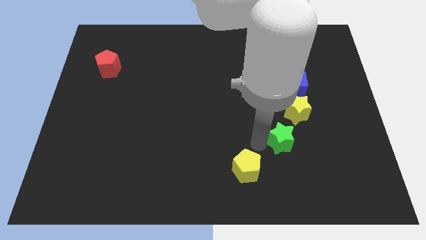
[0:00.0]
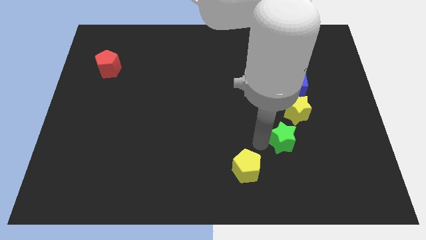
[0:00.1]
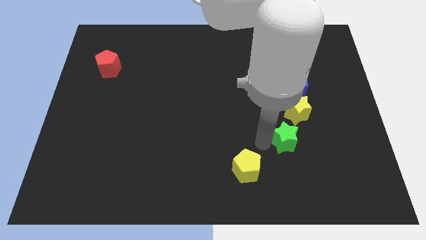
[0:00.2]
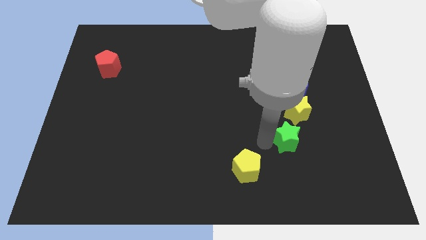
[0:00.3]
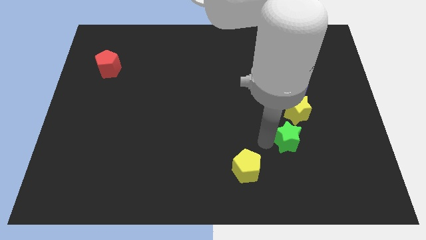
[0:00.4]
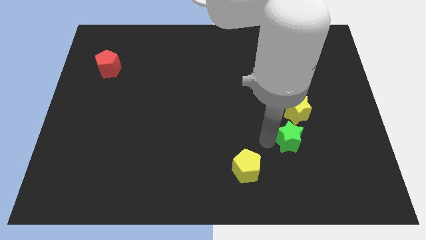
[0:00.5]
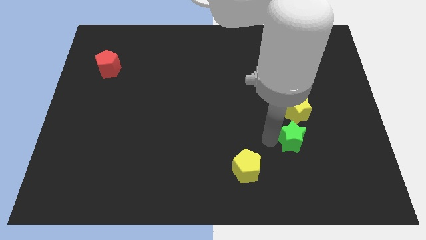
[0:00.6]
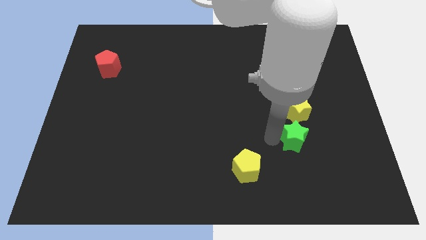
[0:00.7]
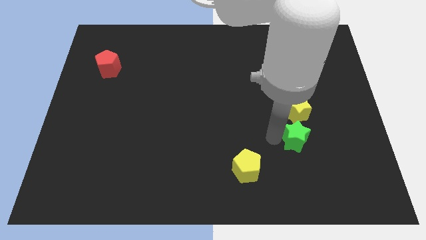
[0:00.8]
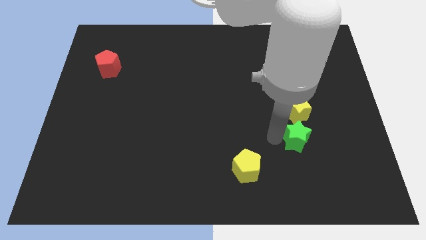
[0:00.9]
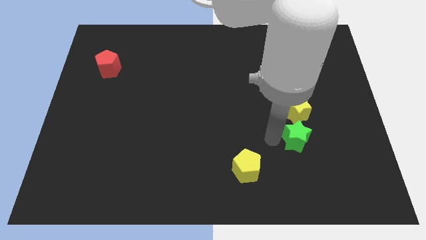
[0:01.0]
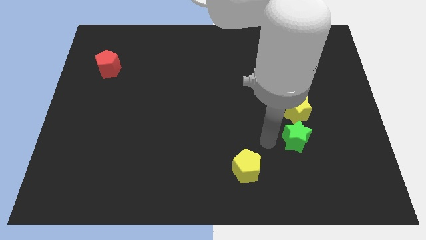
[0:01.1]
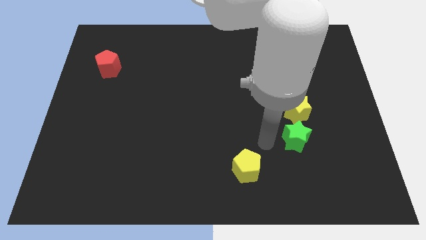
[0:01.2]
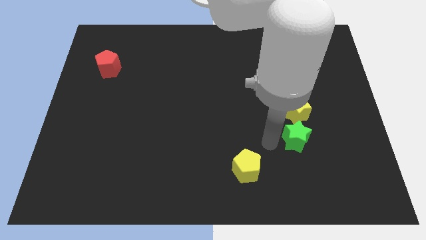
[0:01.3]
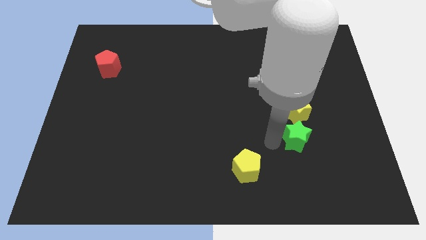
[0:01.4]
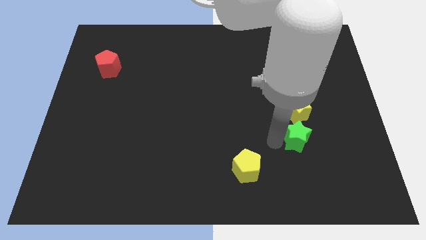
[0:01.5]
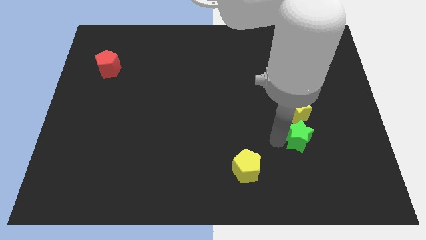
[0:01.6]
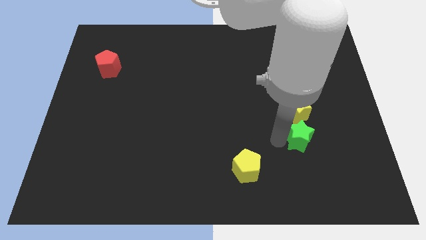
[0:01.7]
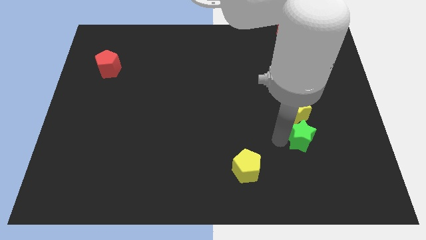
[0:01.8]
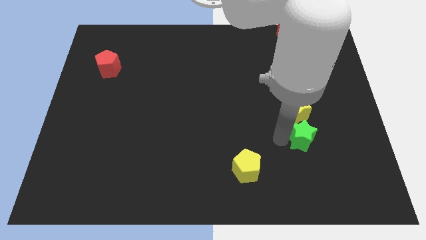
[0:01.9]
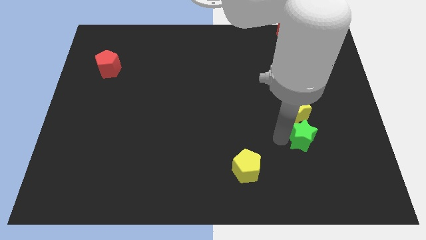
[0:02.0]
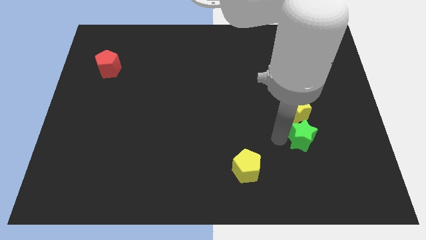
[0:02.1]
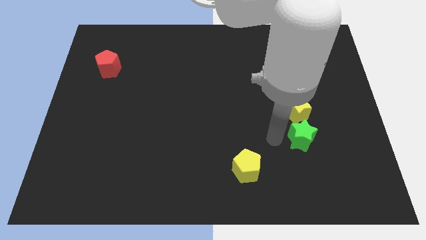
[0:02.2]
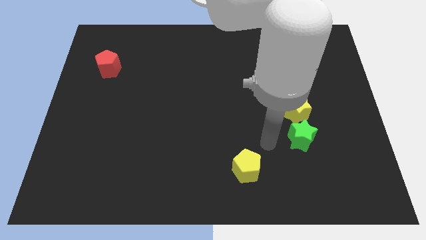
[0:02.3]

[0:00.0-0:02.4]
place the green star below yellow star

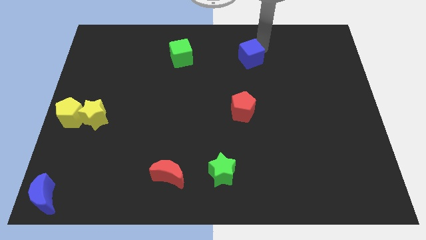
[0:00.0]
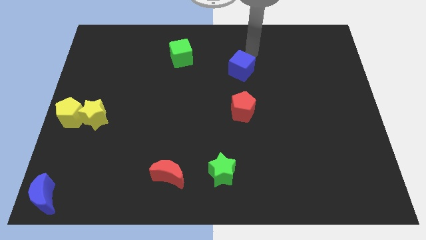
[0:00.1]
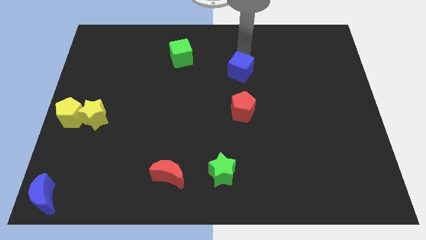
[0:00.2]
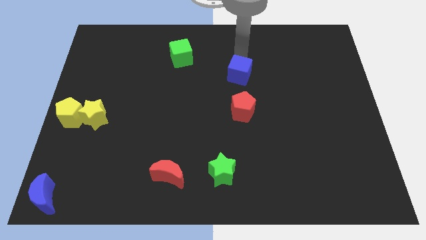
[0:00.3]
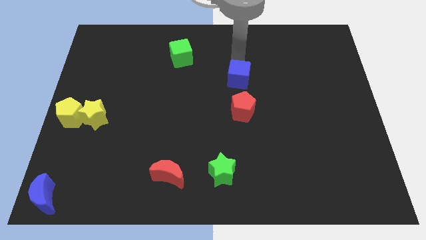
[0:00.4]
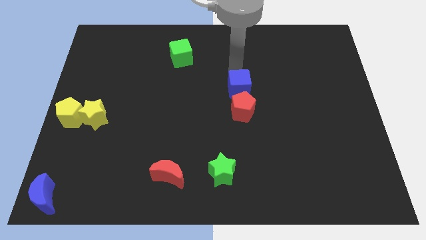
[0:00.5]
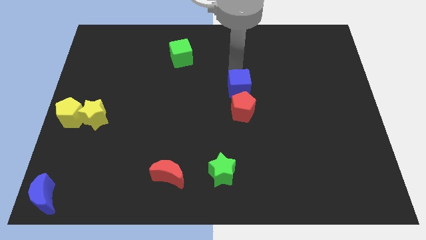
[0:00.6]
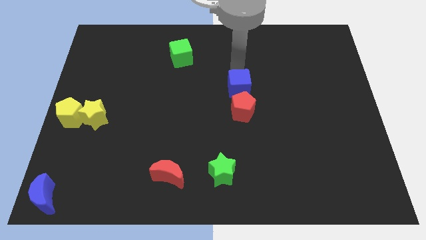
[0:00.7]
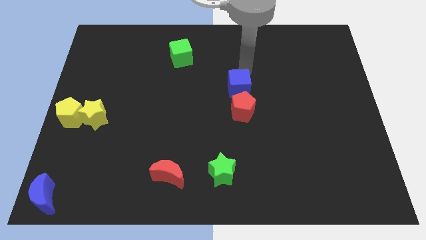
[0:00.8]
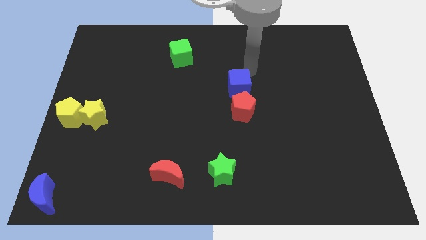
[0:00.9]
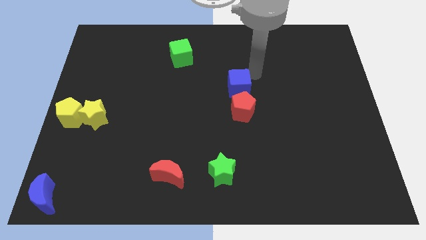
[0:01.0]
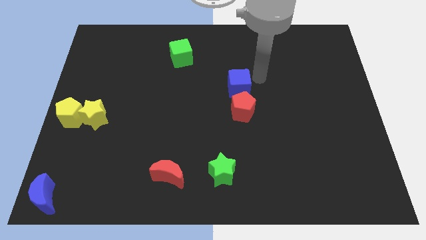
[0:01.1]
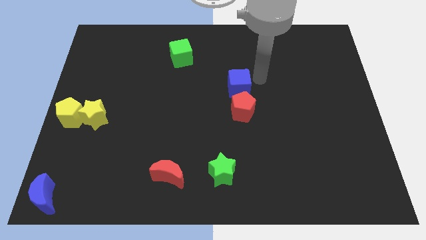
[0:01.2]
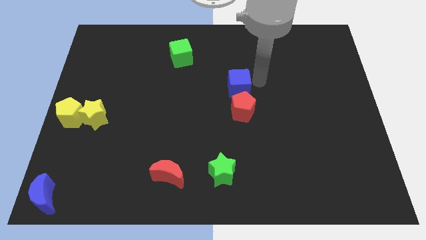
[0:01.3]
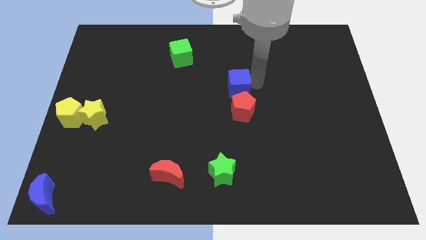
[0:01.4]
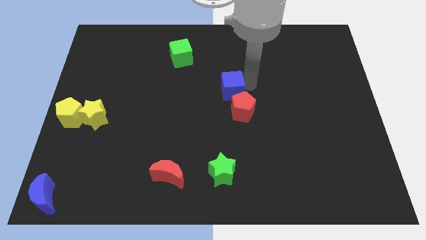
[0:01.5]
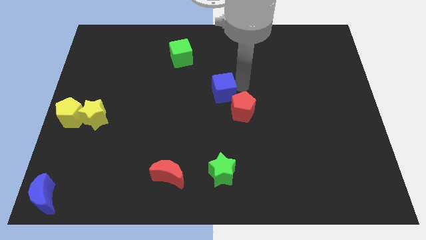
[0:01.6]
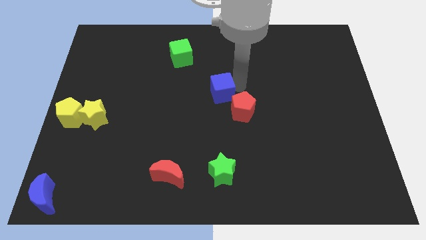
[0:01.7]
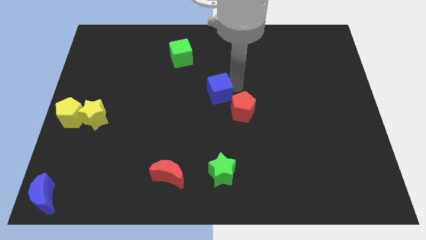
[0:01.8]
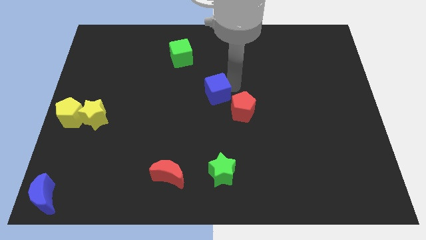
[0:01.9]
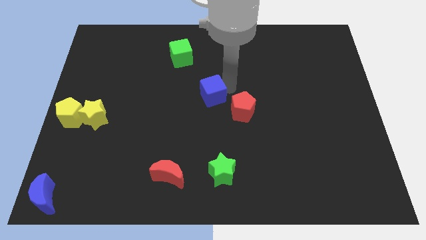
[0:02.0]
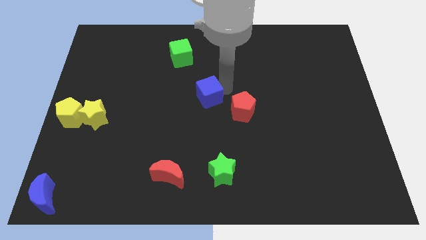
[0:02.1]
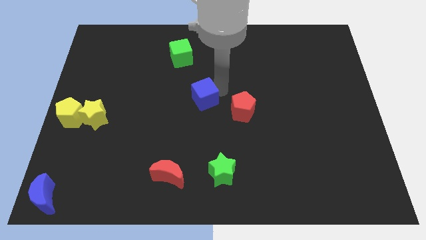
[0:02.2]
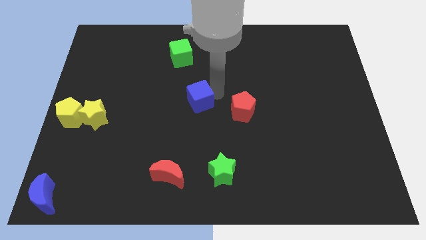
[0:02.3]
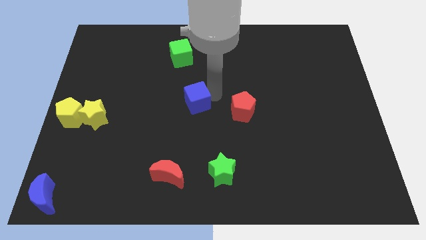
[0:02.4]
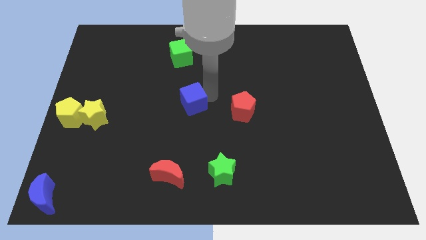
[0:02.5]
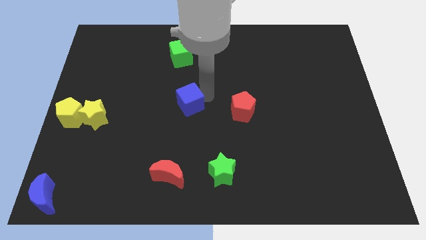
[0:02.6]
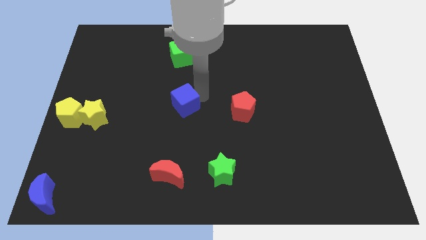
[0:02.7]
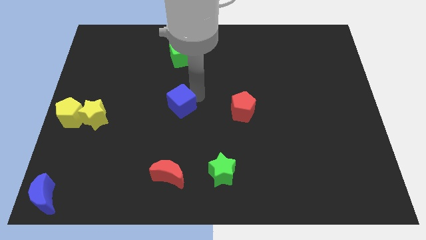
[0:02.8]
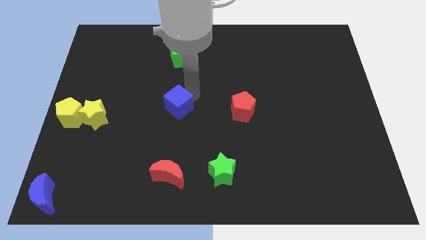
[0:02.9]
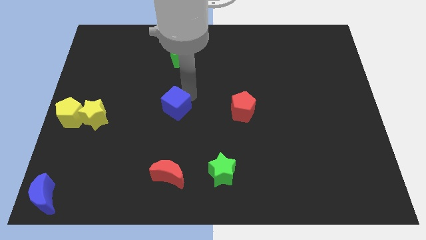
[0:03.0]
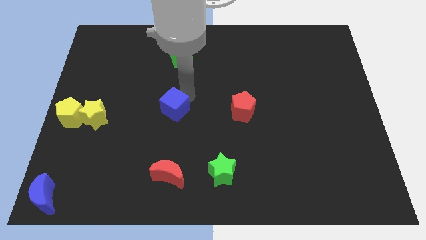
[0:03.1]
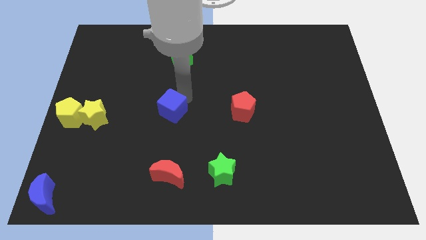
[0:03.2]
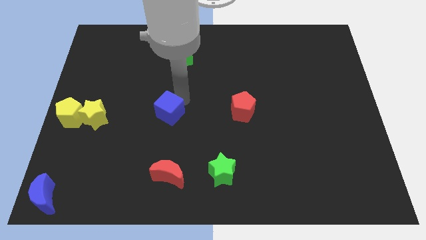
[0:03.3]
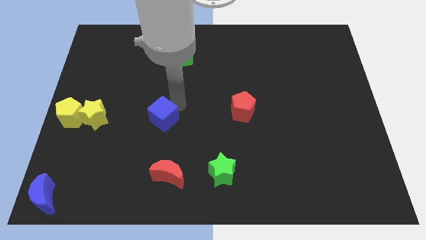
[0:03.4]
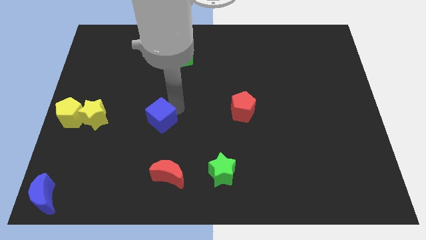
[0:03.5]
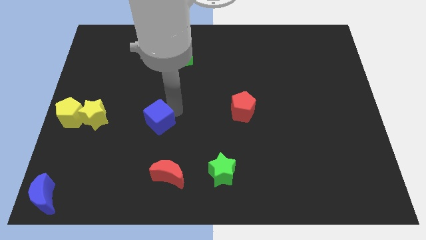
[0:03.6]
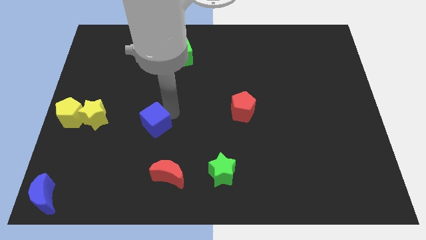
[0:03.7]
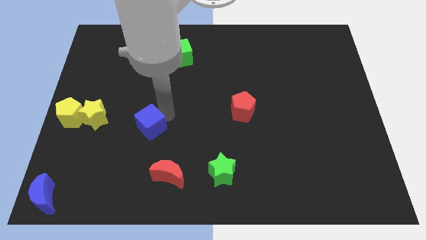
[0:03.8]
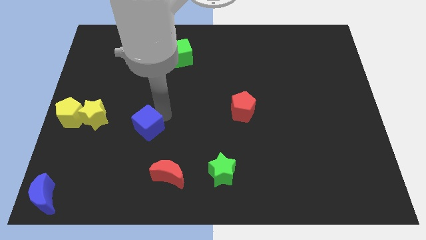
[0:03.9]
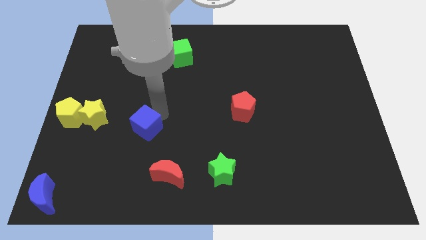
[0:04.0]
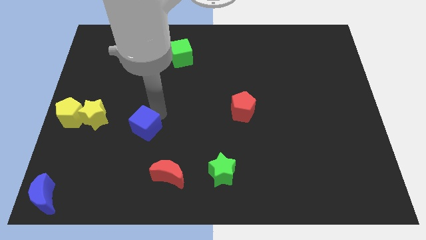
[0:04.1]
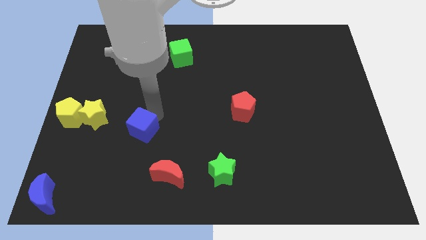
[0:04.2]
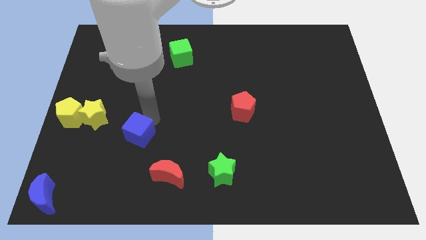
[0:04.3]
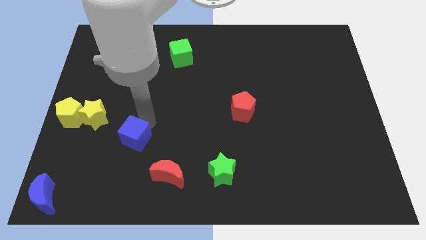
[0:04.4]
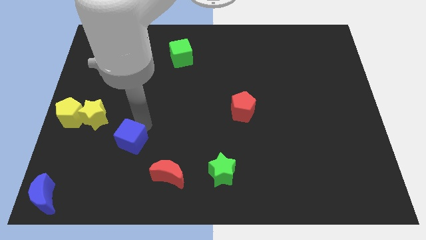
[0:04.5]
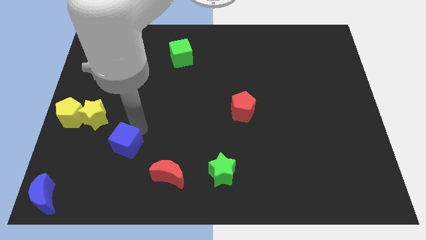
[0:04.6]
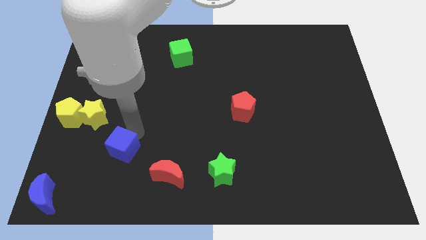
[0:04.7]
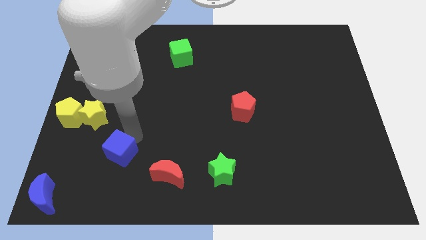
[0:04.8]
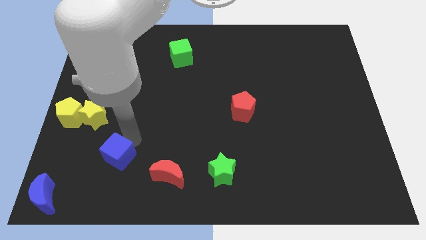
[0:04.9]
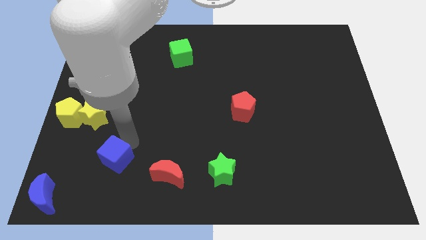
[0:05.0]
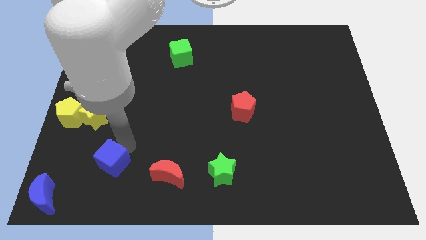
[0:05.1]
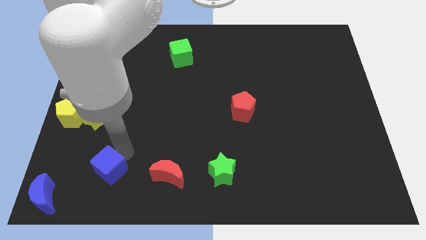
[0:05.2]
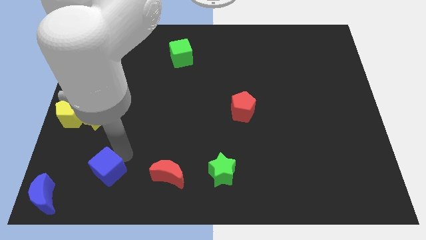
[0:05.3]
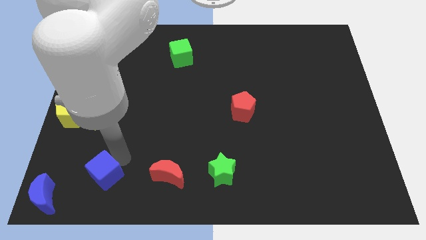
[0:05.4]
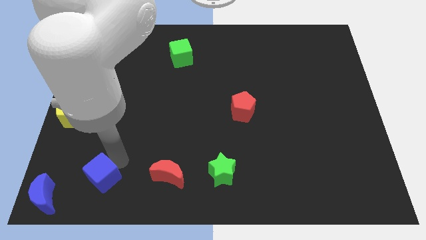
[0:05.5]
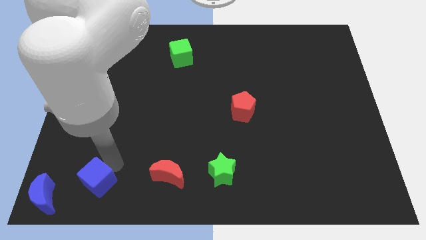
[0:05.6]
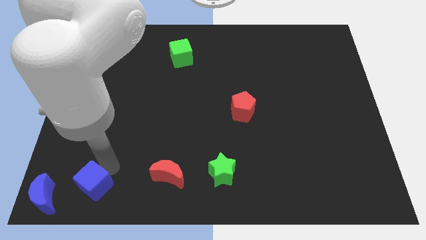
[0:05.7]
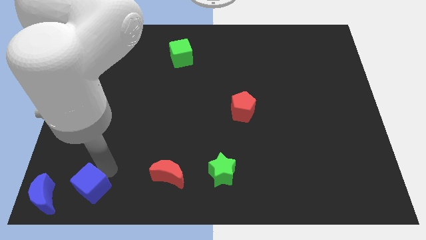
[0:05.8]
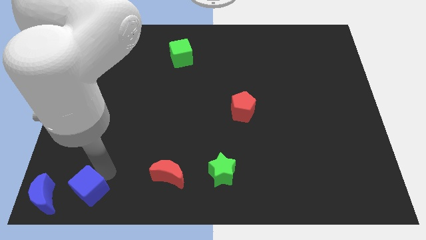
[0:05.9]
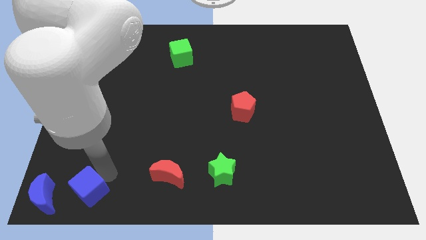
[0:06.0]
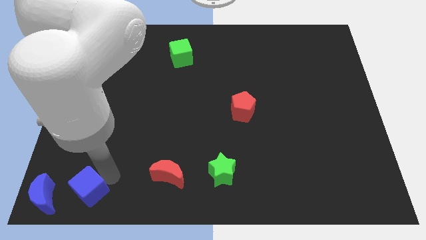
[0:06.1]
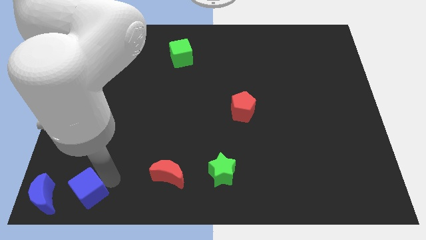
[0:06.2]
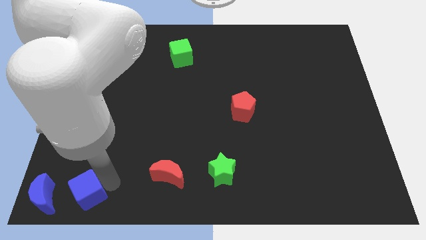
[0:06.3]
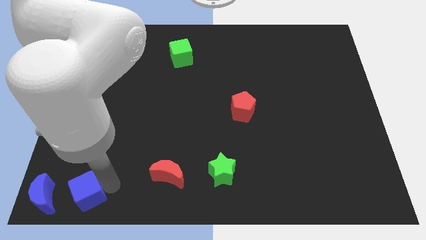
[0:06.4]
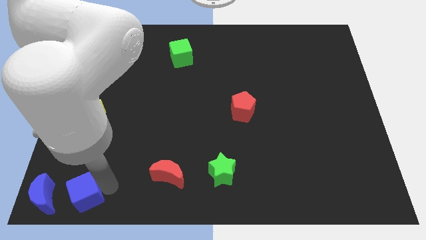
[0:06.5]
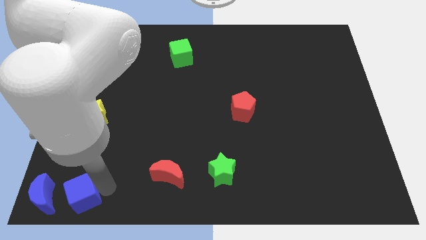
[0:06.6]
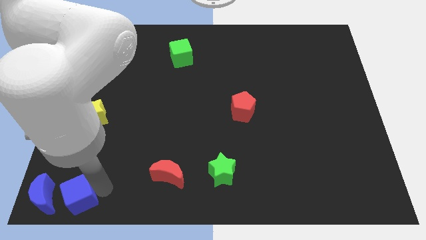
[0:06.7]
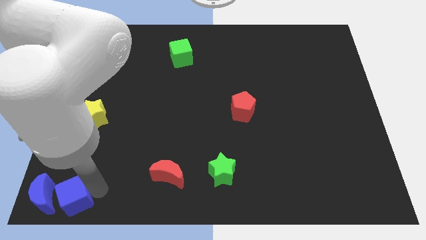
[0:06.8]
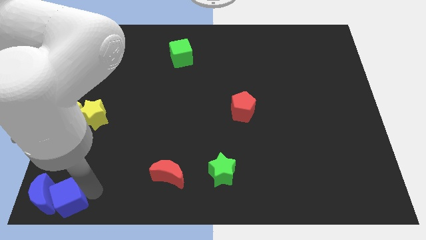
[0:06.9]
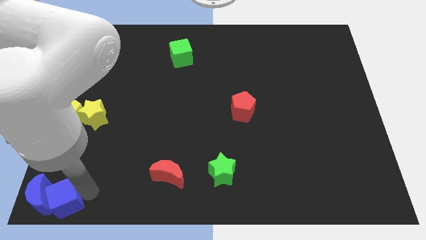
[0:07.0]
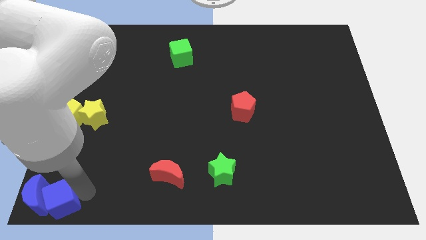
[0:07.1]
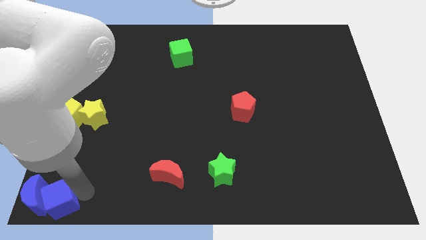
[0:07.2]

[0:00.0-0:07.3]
move the blue cube into the right of blue moon
